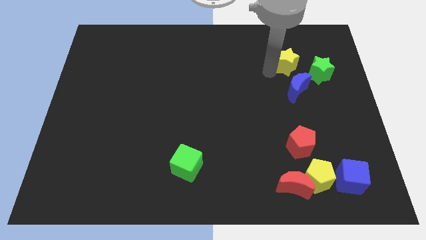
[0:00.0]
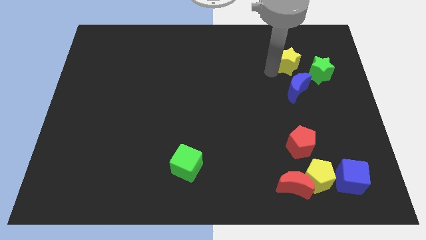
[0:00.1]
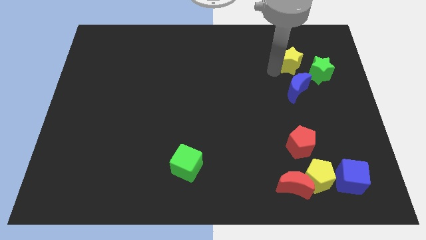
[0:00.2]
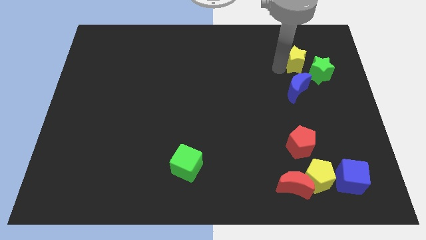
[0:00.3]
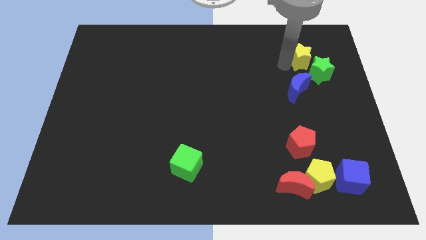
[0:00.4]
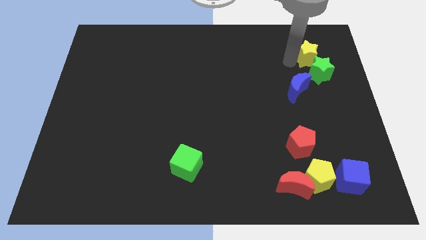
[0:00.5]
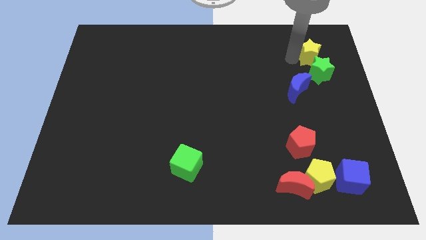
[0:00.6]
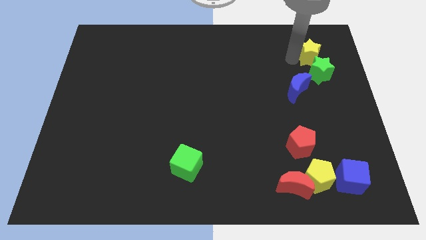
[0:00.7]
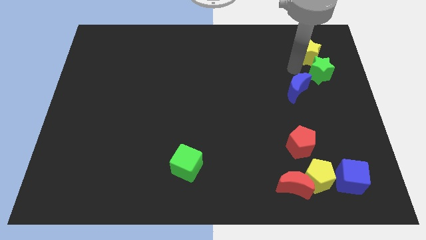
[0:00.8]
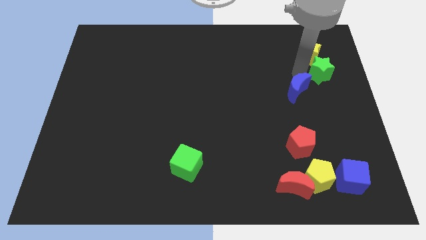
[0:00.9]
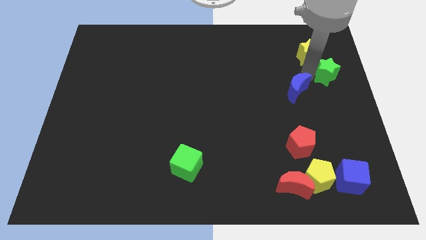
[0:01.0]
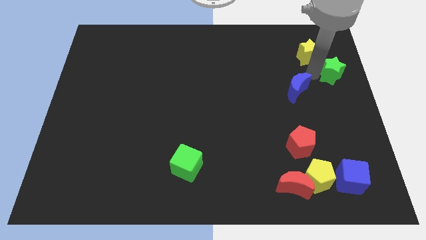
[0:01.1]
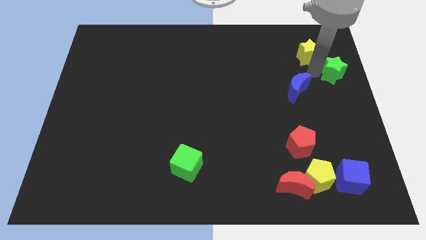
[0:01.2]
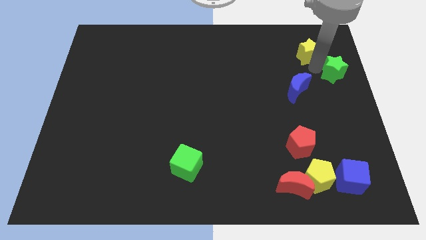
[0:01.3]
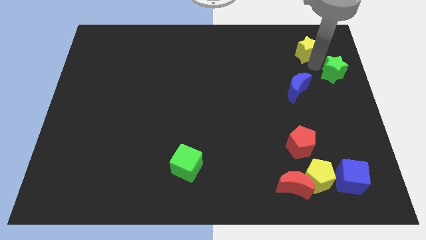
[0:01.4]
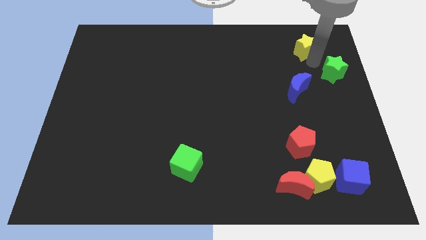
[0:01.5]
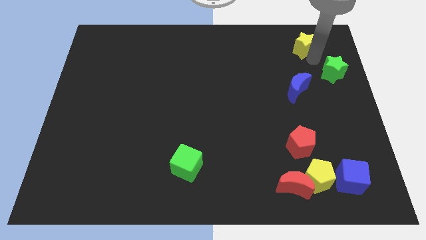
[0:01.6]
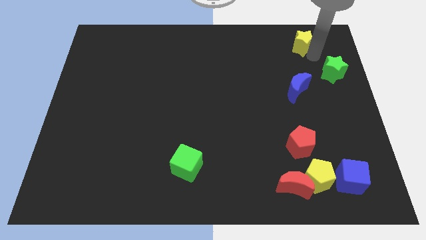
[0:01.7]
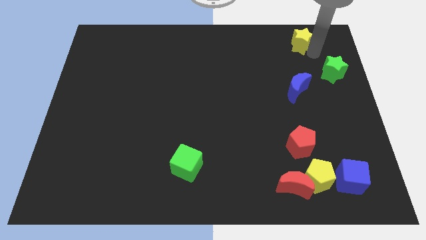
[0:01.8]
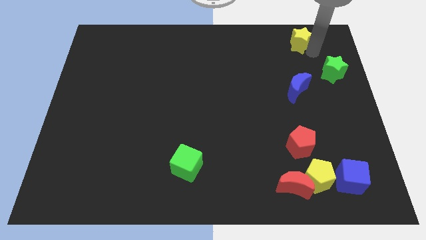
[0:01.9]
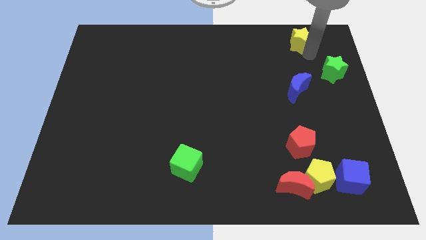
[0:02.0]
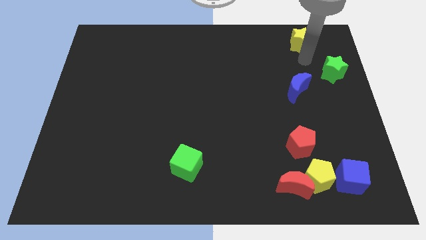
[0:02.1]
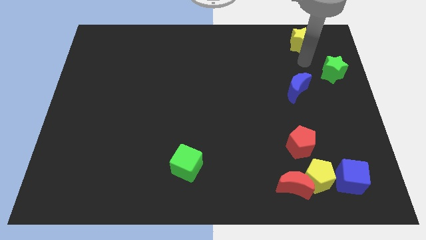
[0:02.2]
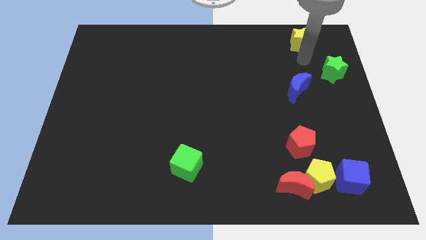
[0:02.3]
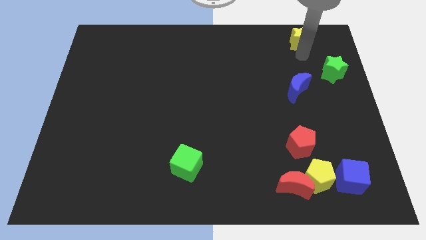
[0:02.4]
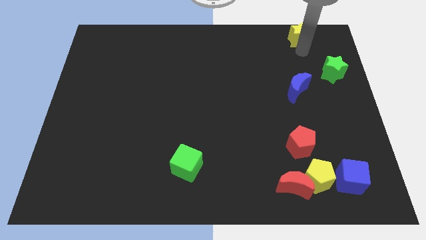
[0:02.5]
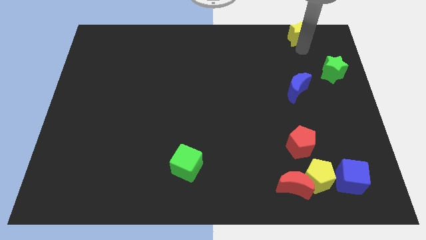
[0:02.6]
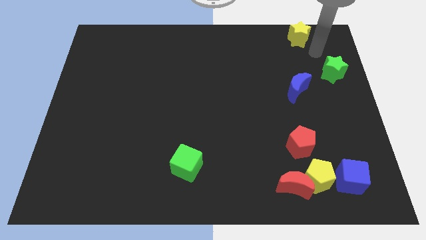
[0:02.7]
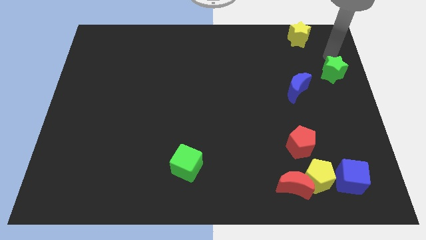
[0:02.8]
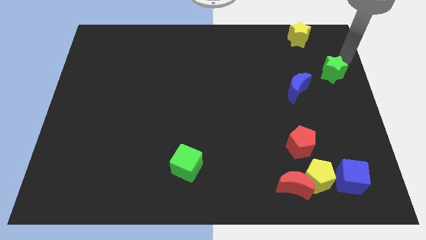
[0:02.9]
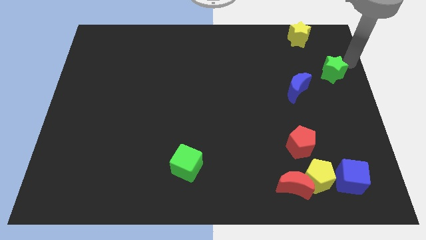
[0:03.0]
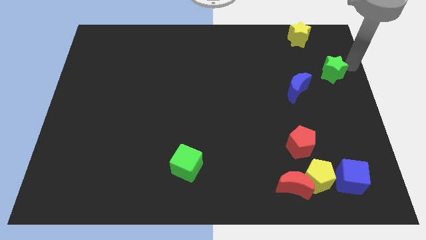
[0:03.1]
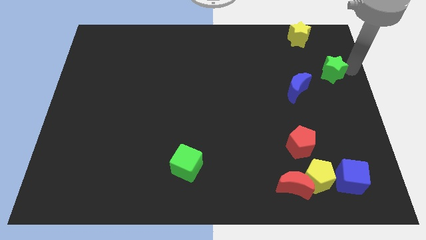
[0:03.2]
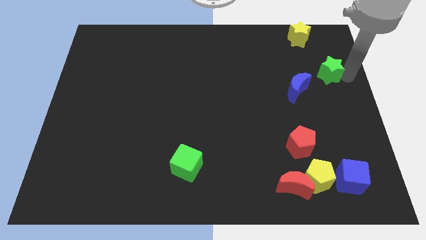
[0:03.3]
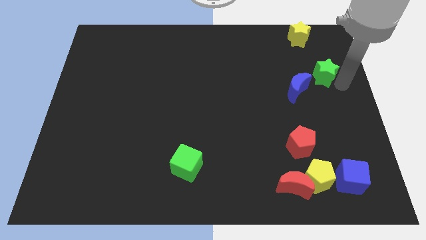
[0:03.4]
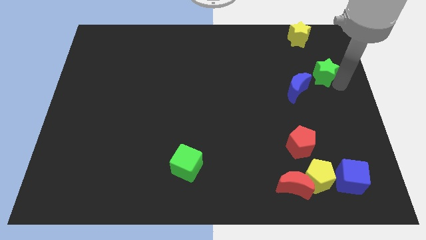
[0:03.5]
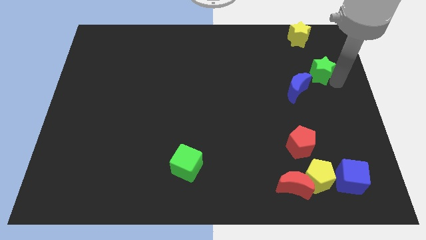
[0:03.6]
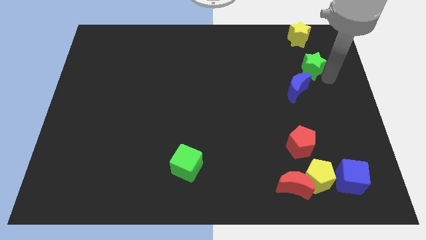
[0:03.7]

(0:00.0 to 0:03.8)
separate the yellow star from the green star

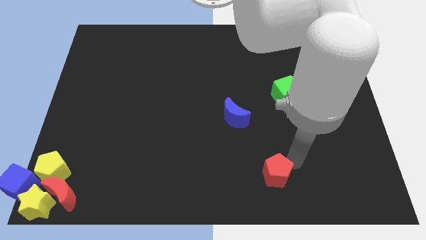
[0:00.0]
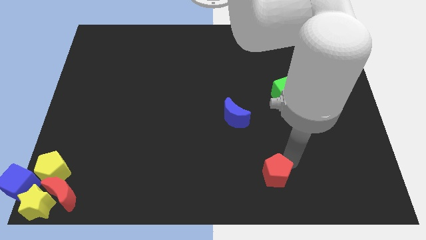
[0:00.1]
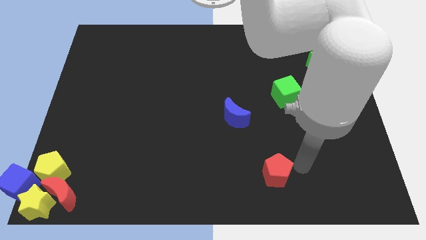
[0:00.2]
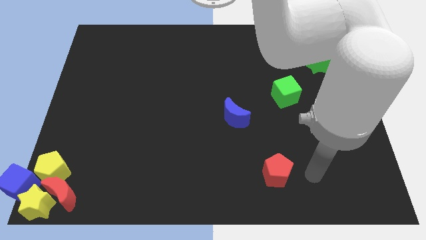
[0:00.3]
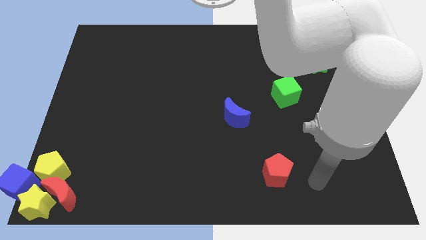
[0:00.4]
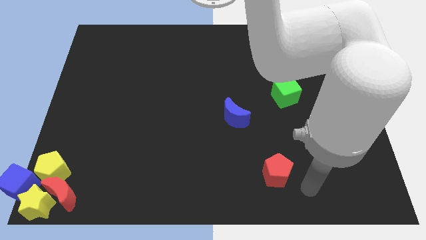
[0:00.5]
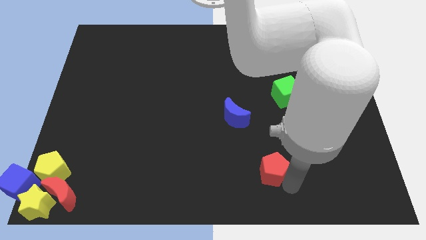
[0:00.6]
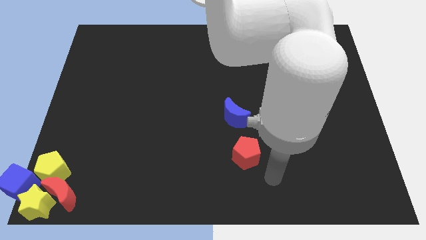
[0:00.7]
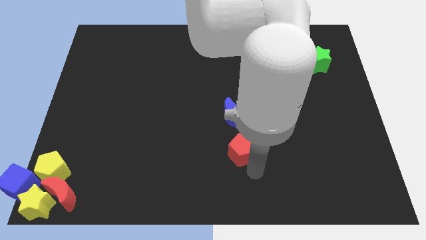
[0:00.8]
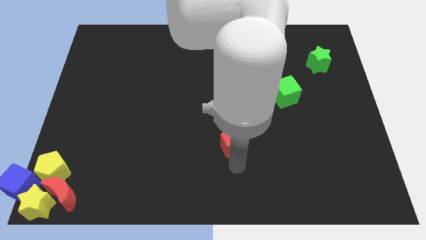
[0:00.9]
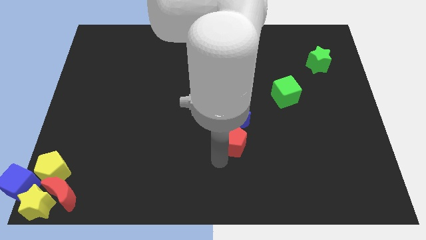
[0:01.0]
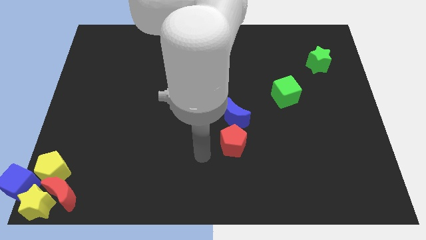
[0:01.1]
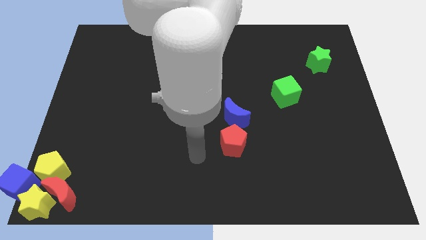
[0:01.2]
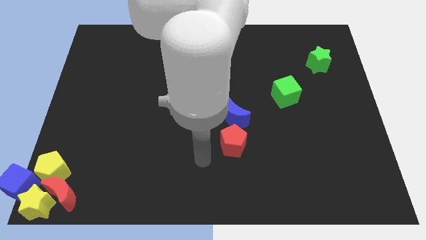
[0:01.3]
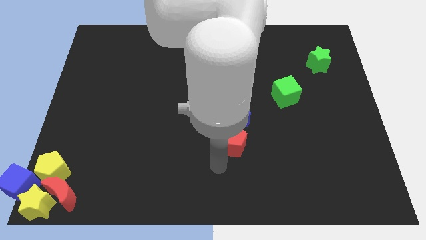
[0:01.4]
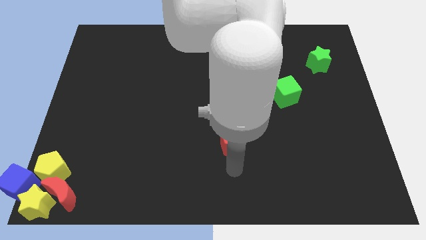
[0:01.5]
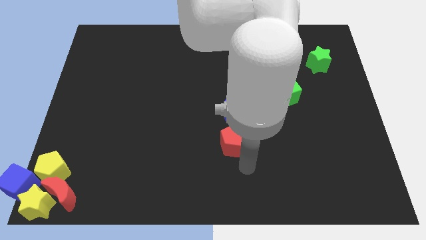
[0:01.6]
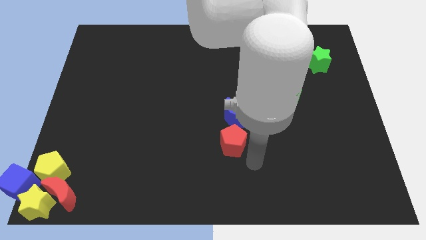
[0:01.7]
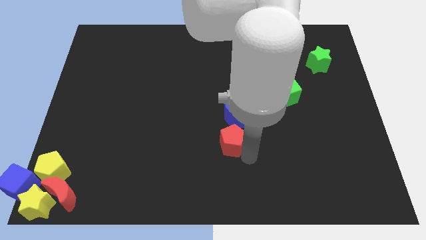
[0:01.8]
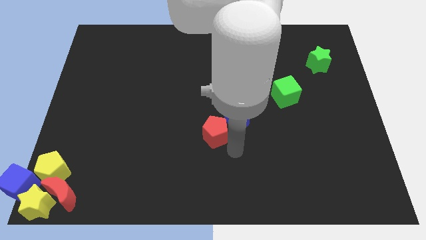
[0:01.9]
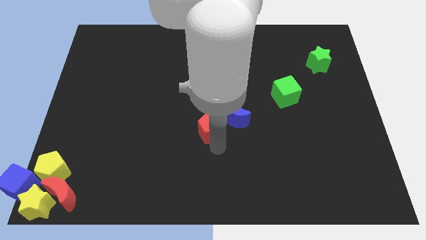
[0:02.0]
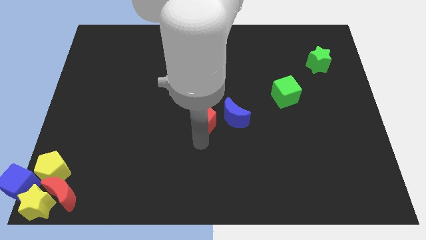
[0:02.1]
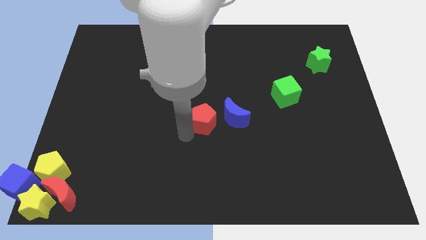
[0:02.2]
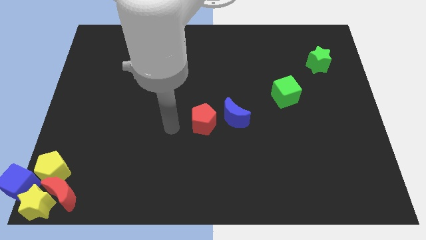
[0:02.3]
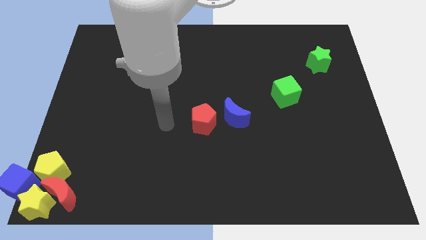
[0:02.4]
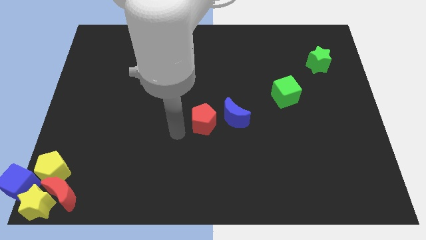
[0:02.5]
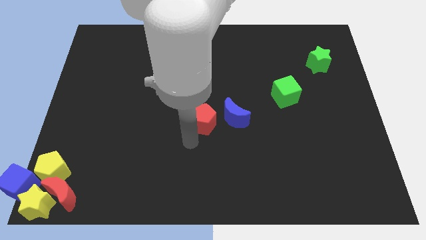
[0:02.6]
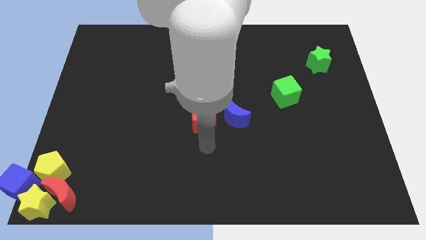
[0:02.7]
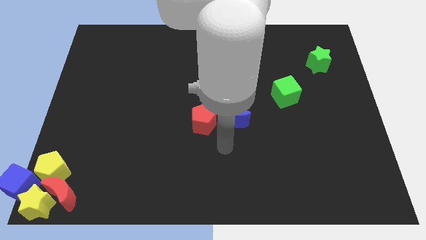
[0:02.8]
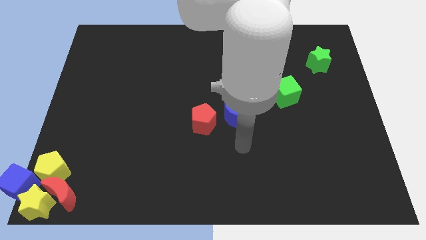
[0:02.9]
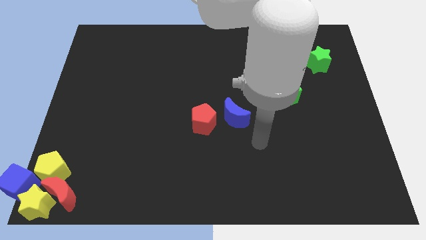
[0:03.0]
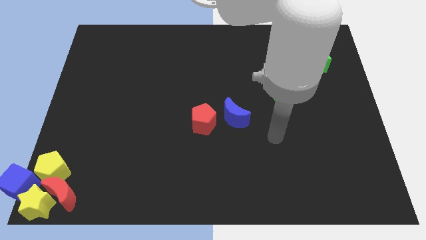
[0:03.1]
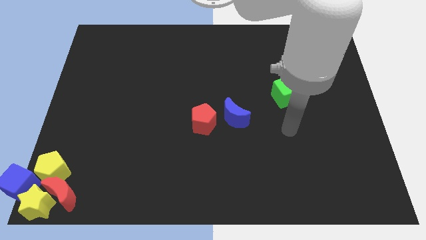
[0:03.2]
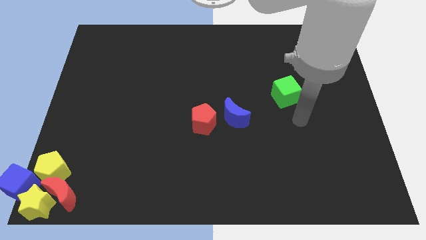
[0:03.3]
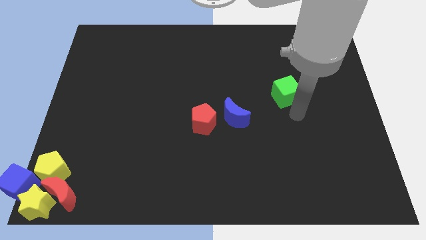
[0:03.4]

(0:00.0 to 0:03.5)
move red pentagon to the left of blue moon

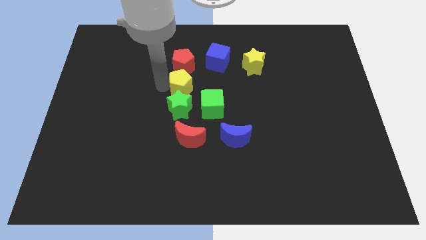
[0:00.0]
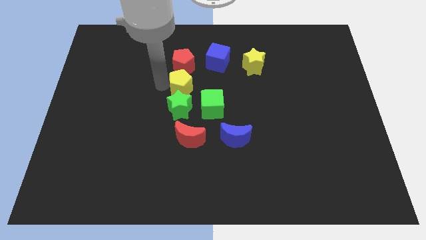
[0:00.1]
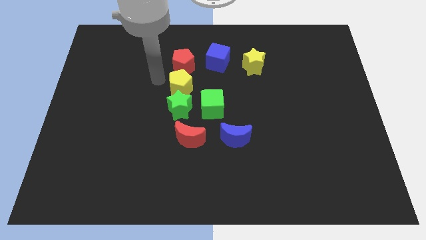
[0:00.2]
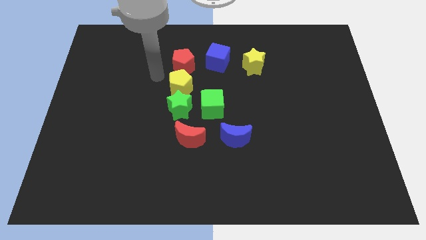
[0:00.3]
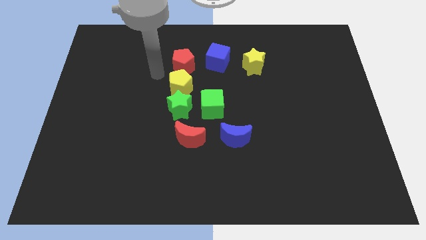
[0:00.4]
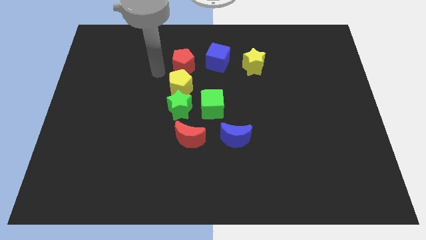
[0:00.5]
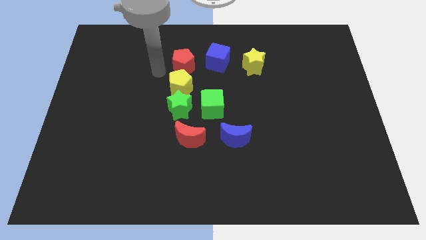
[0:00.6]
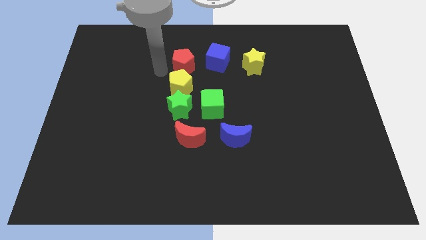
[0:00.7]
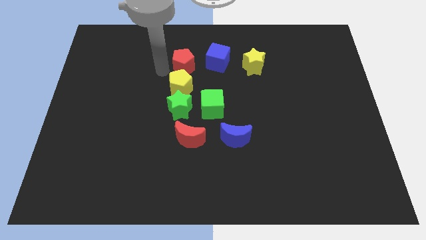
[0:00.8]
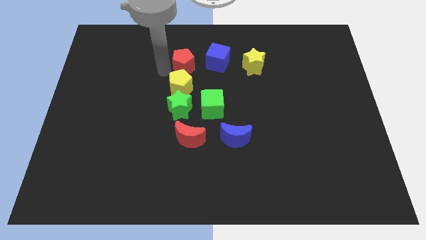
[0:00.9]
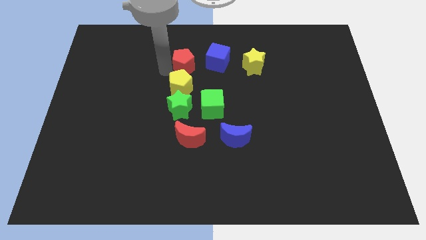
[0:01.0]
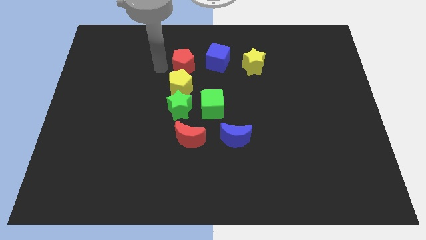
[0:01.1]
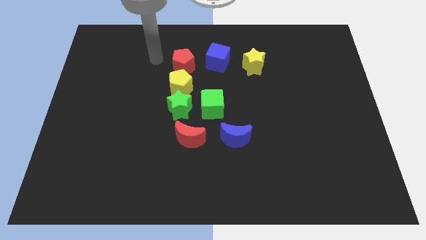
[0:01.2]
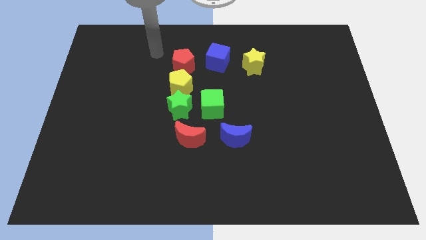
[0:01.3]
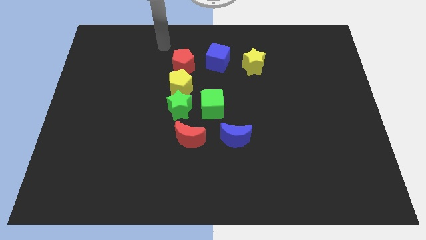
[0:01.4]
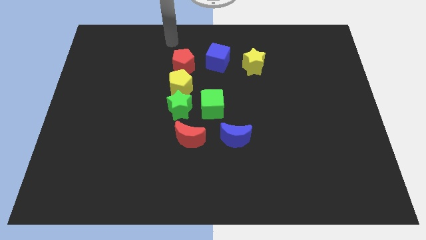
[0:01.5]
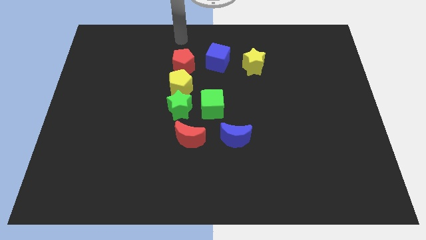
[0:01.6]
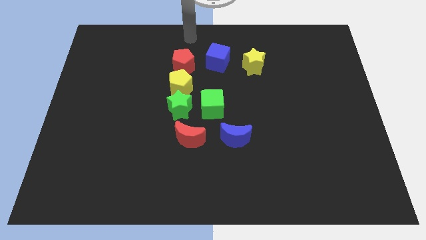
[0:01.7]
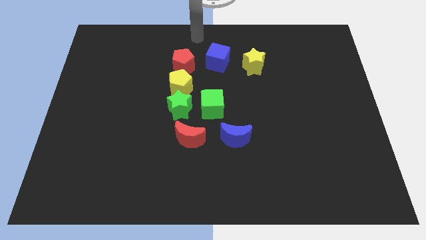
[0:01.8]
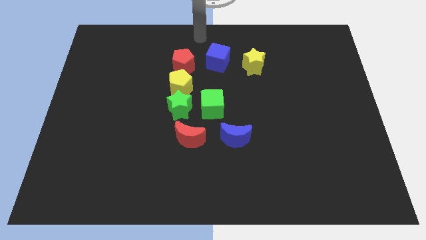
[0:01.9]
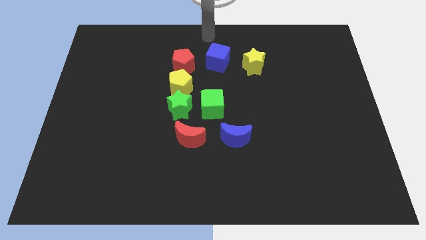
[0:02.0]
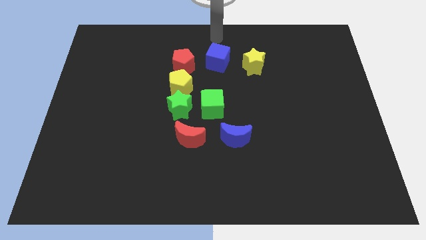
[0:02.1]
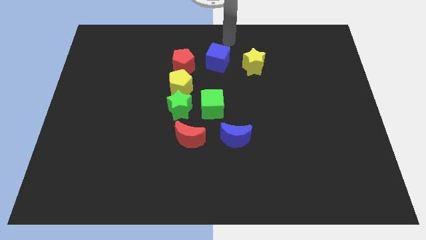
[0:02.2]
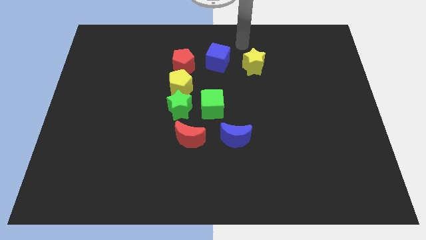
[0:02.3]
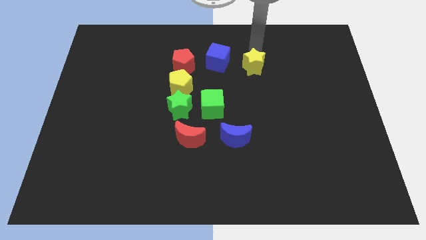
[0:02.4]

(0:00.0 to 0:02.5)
touch the yellow and red pentagon and point your arm above yellow star
